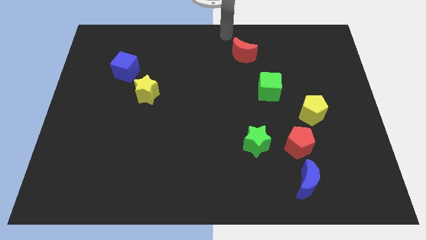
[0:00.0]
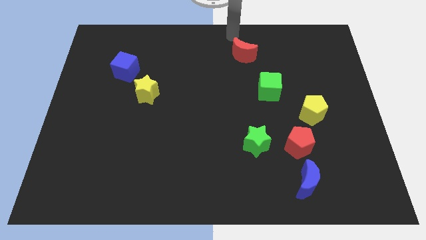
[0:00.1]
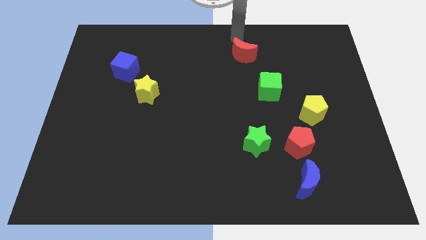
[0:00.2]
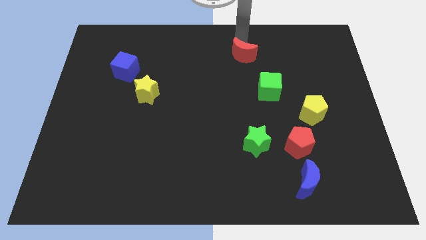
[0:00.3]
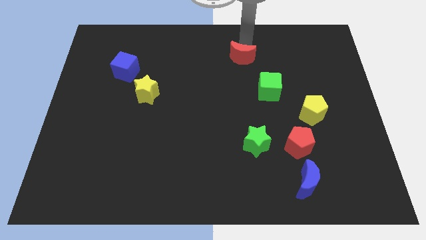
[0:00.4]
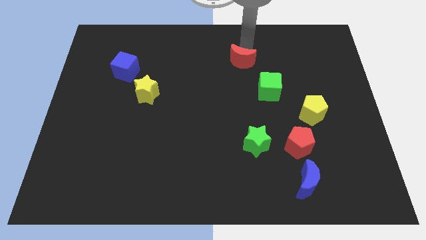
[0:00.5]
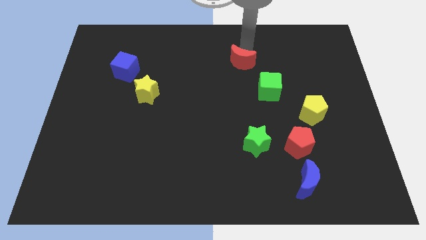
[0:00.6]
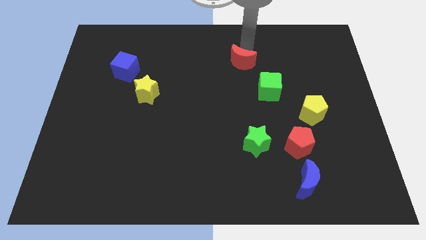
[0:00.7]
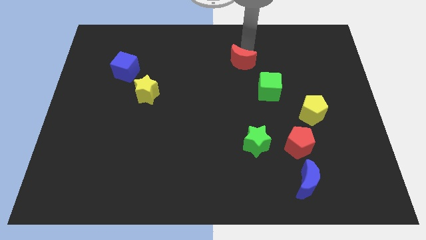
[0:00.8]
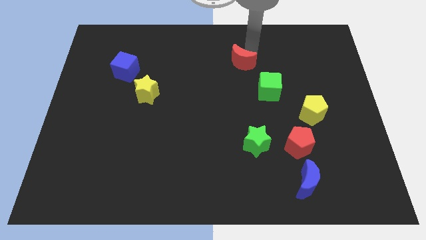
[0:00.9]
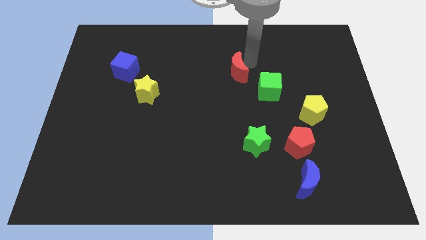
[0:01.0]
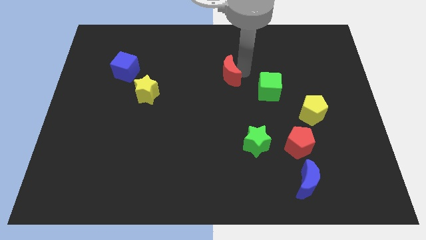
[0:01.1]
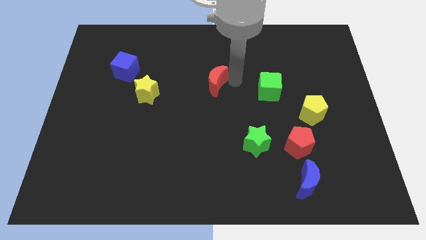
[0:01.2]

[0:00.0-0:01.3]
place red moon to the left of green cube

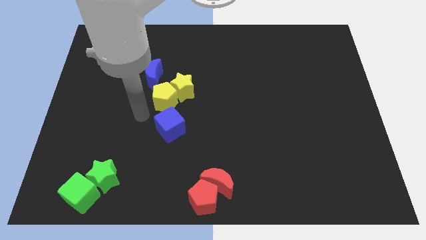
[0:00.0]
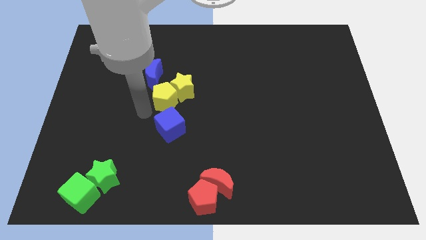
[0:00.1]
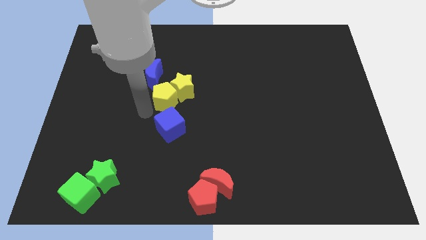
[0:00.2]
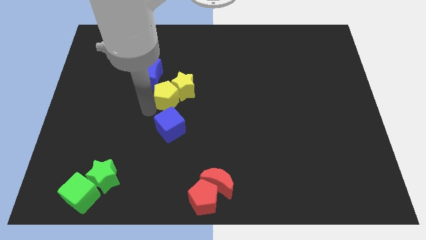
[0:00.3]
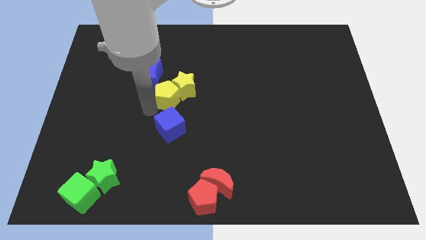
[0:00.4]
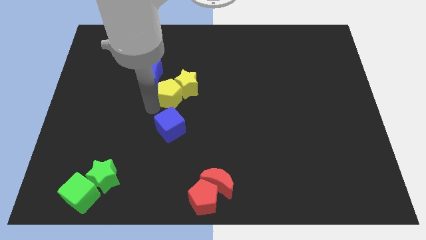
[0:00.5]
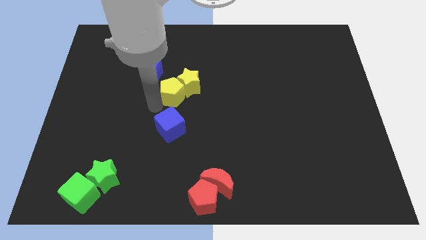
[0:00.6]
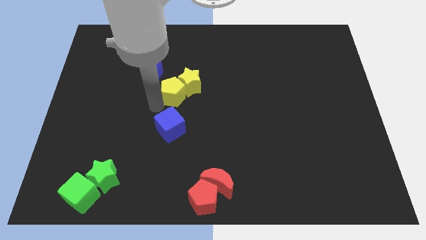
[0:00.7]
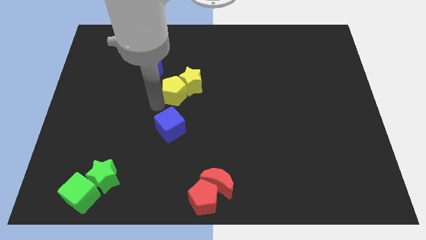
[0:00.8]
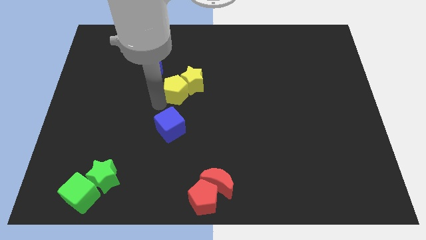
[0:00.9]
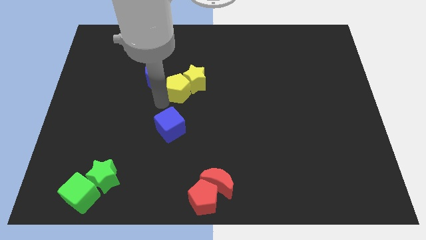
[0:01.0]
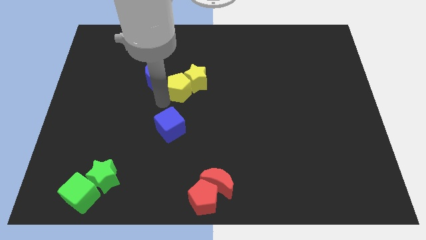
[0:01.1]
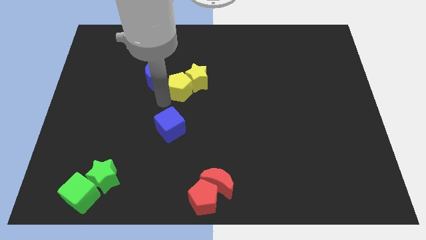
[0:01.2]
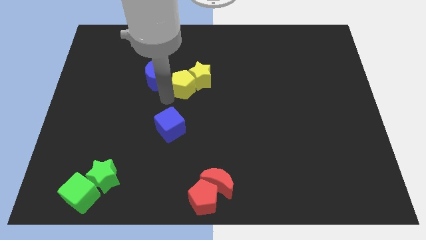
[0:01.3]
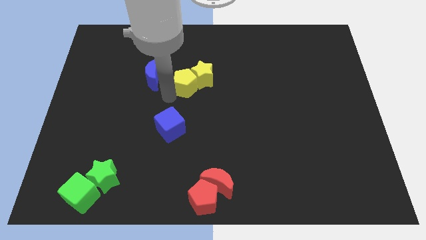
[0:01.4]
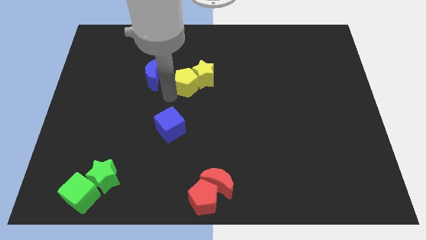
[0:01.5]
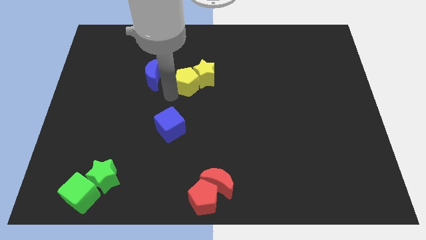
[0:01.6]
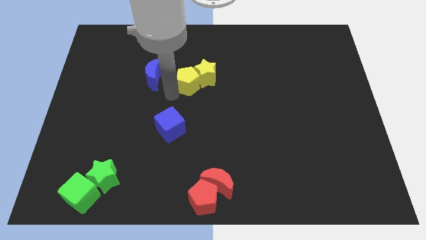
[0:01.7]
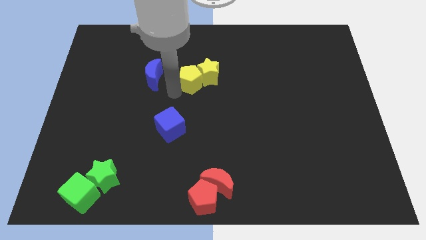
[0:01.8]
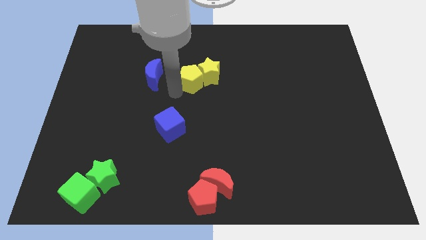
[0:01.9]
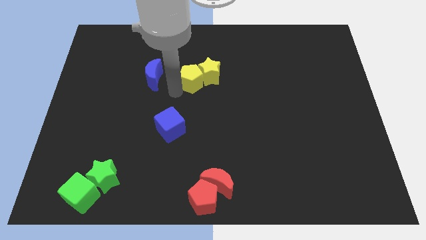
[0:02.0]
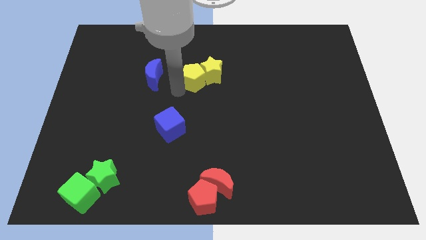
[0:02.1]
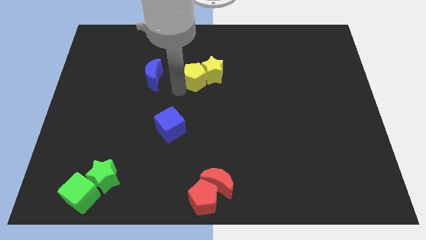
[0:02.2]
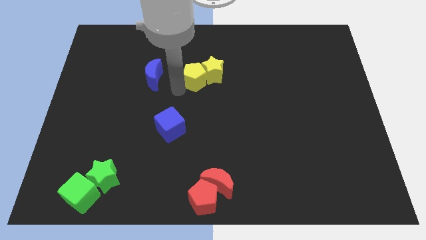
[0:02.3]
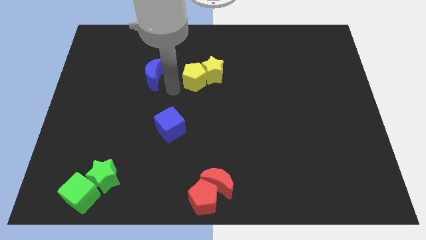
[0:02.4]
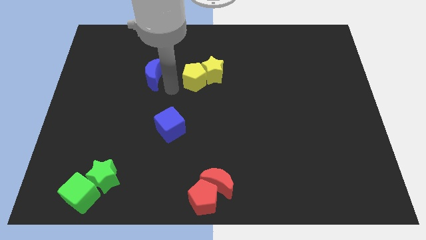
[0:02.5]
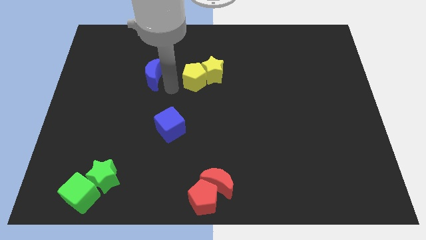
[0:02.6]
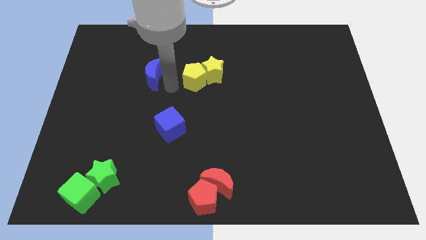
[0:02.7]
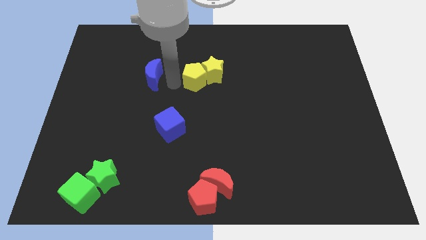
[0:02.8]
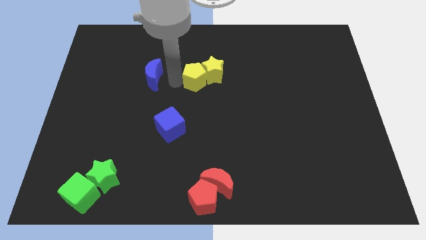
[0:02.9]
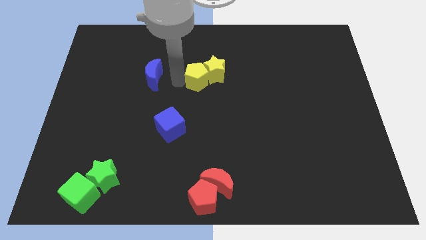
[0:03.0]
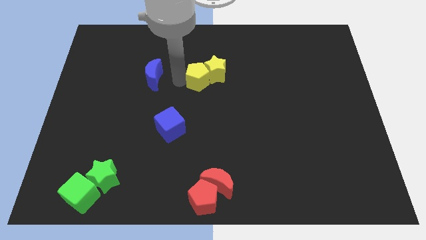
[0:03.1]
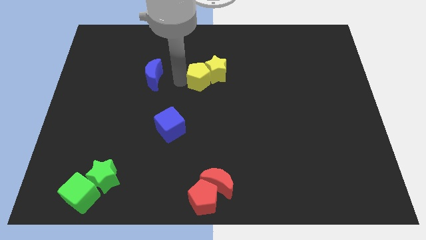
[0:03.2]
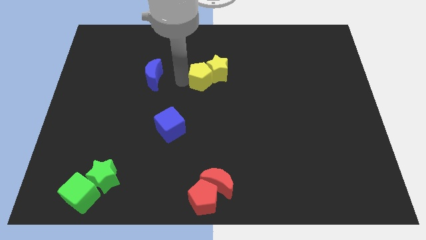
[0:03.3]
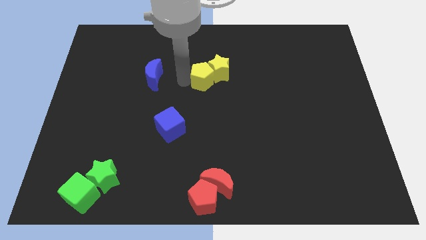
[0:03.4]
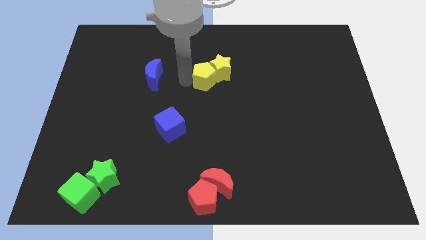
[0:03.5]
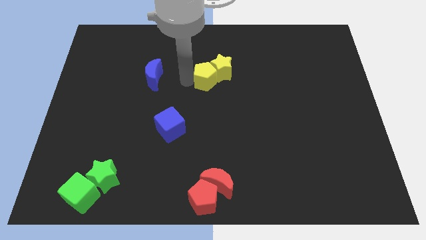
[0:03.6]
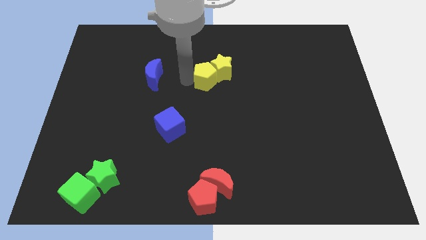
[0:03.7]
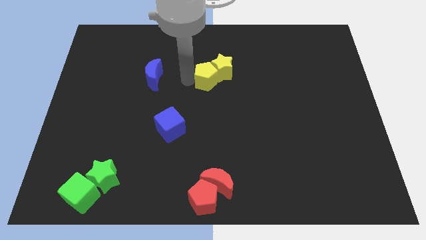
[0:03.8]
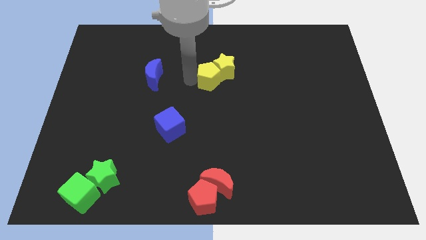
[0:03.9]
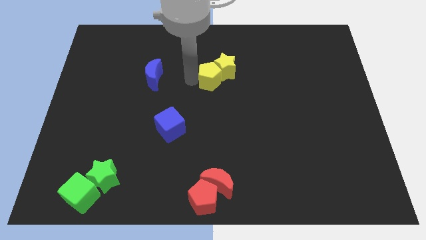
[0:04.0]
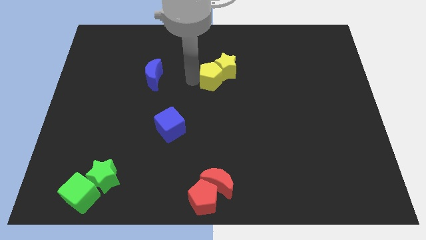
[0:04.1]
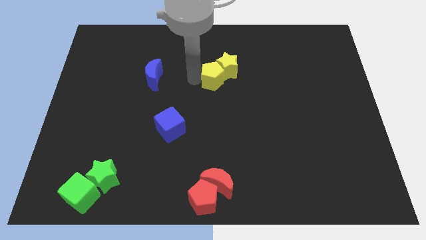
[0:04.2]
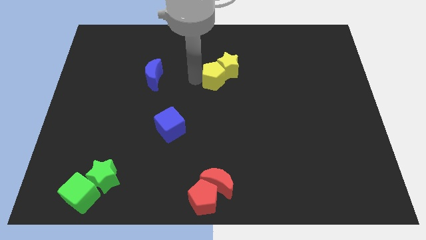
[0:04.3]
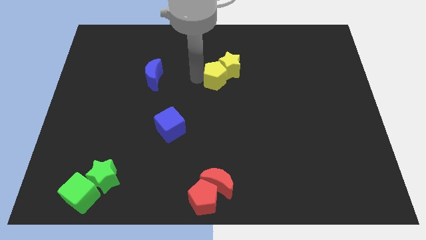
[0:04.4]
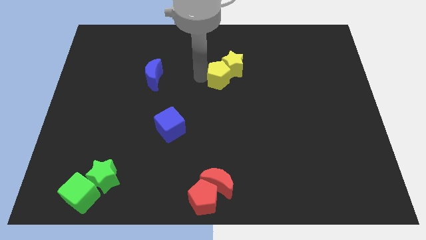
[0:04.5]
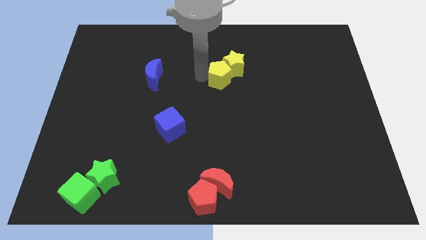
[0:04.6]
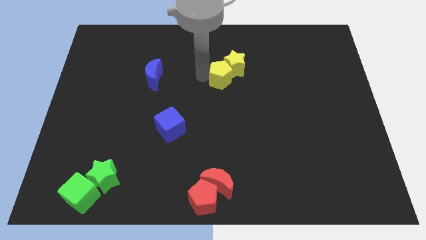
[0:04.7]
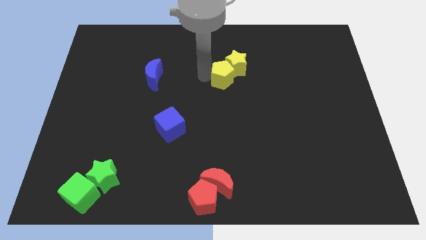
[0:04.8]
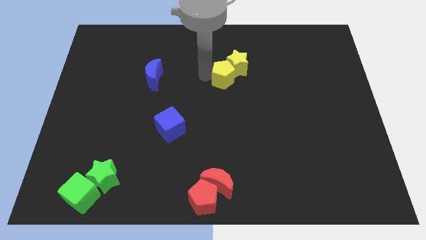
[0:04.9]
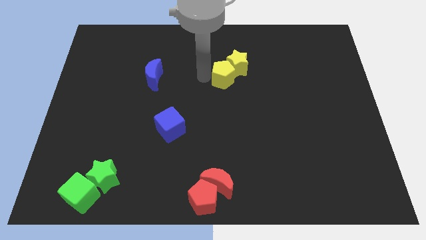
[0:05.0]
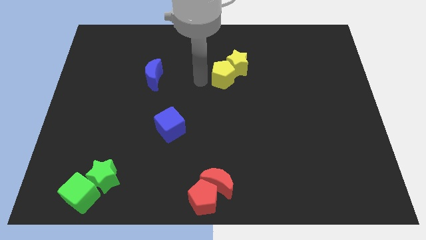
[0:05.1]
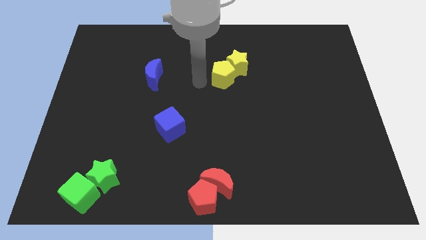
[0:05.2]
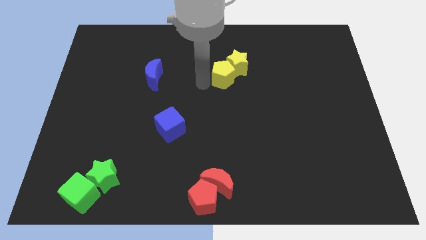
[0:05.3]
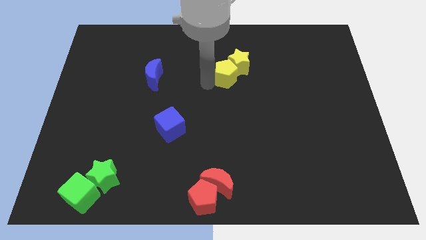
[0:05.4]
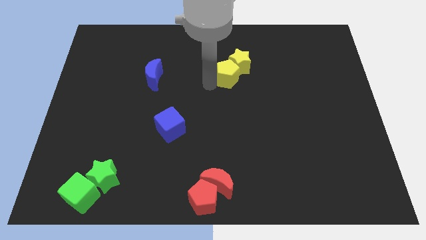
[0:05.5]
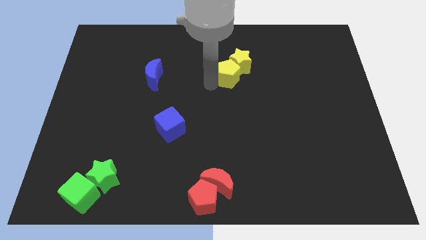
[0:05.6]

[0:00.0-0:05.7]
drag both the yellow blocks towards the right side of the board

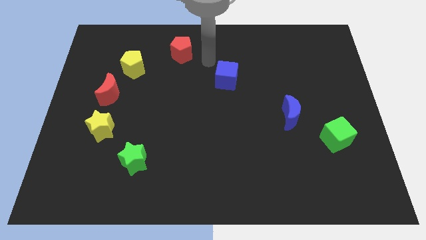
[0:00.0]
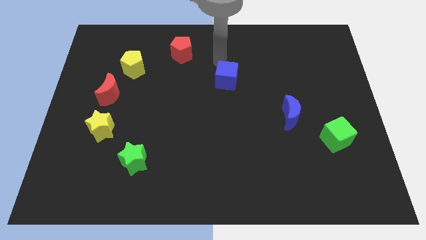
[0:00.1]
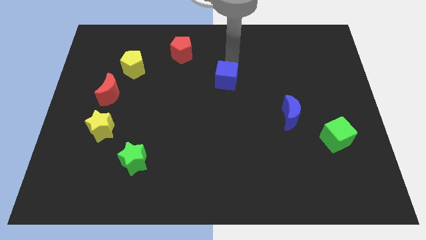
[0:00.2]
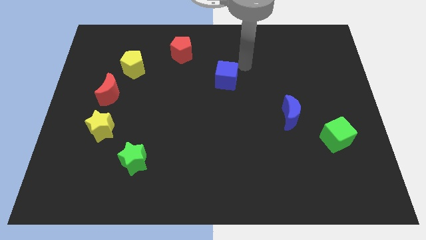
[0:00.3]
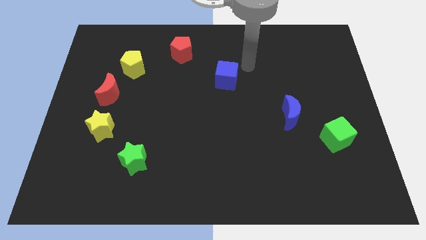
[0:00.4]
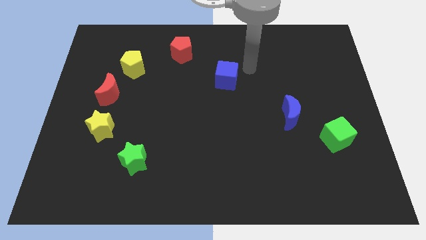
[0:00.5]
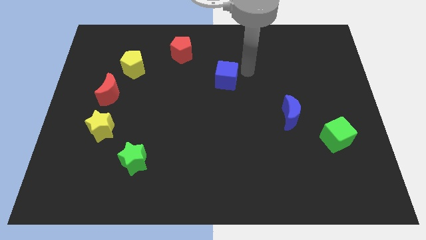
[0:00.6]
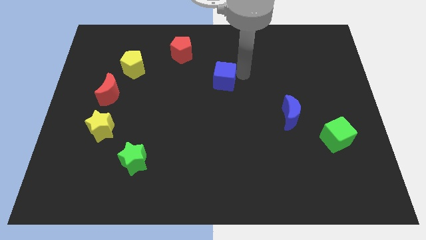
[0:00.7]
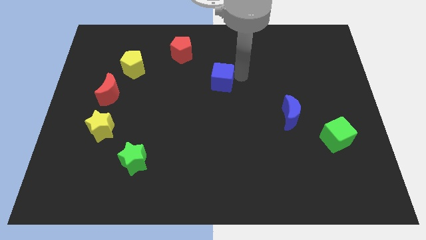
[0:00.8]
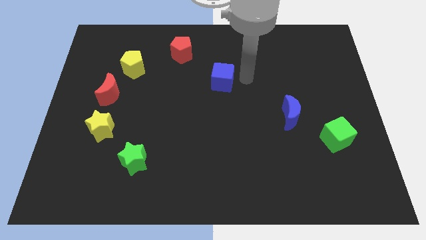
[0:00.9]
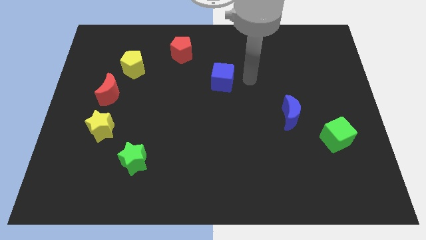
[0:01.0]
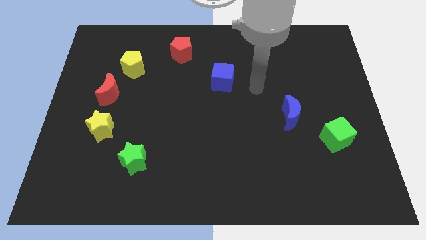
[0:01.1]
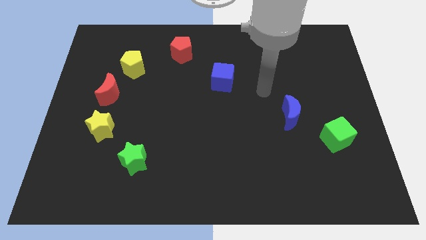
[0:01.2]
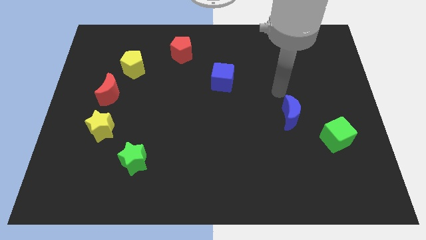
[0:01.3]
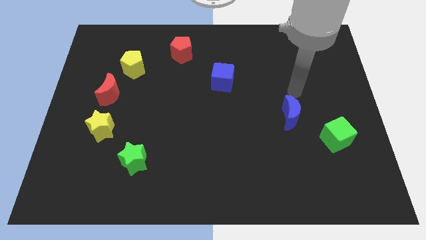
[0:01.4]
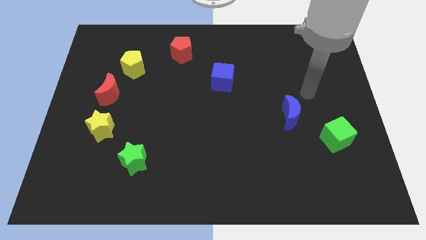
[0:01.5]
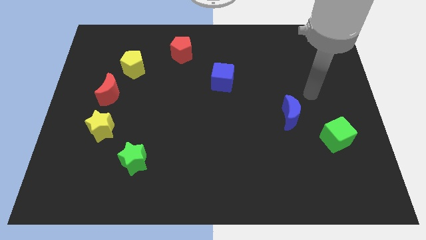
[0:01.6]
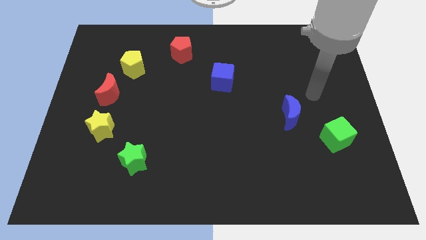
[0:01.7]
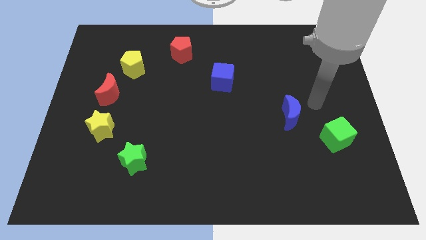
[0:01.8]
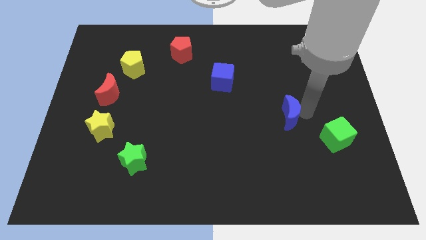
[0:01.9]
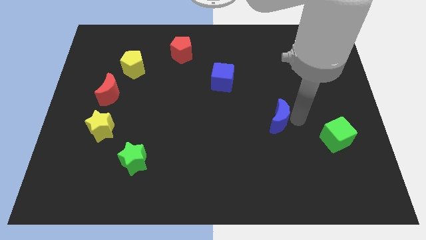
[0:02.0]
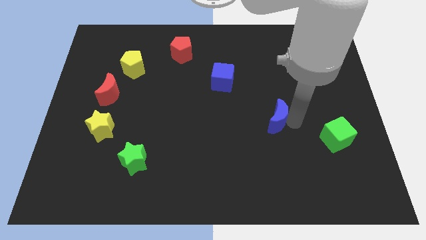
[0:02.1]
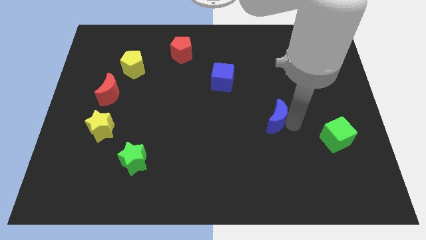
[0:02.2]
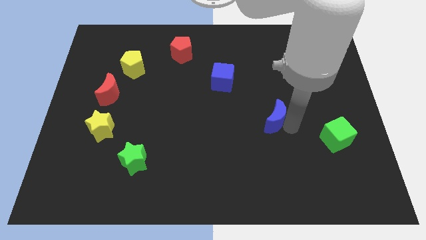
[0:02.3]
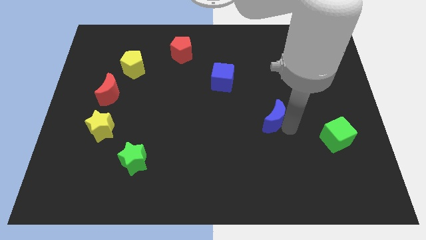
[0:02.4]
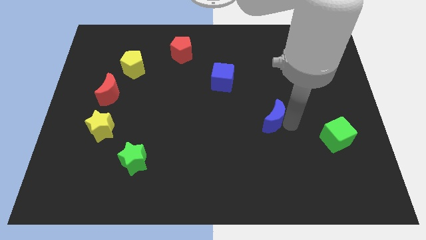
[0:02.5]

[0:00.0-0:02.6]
move your arm towards blue moon
